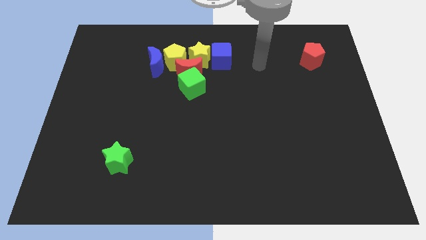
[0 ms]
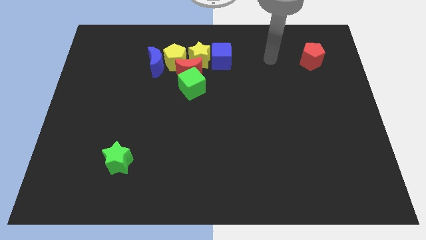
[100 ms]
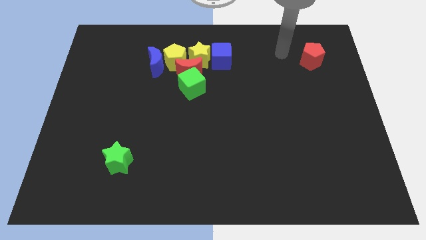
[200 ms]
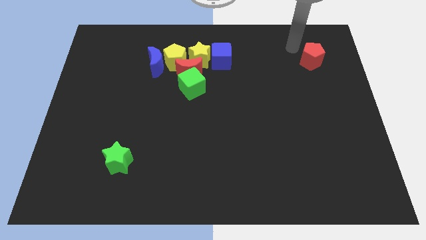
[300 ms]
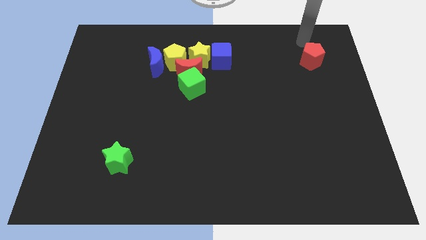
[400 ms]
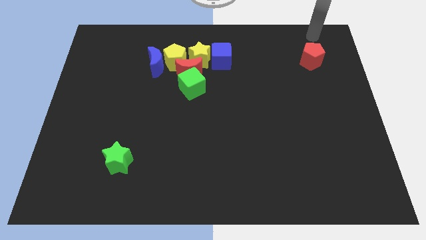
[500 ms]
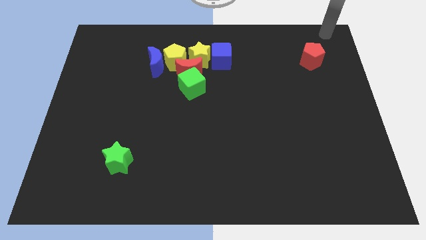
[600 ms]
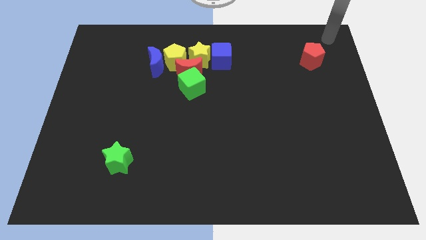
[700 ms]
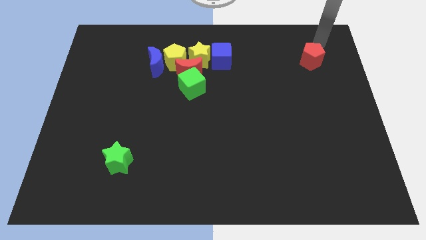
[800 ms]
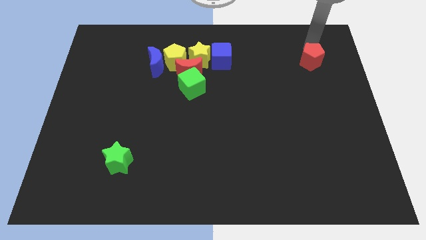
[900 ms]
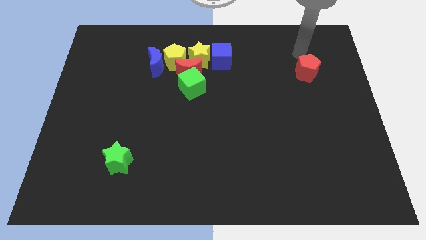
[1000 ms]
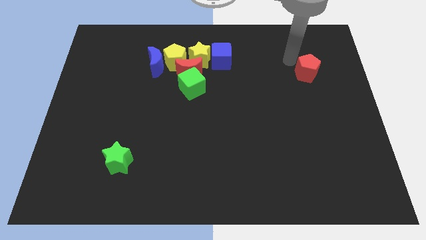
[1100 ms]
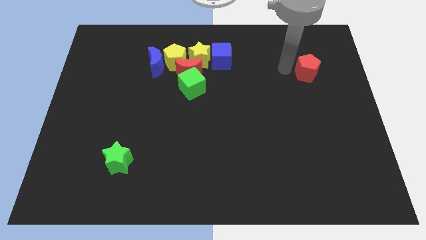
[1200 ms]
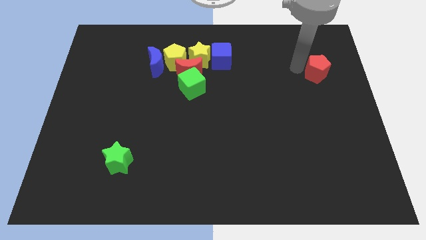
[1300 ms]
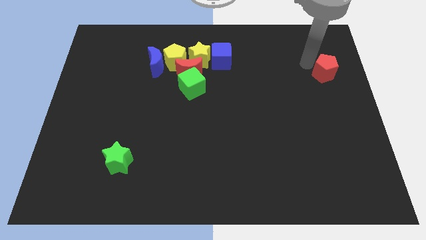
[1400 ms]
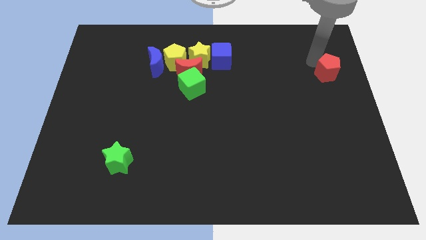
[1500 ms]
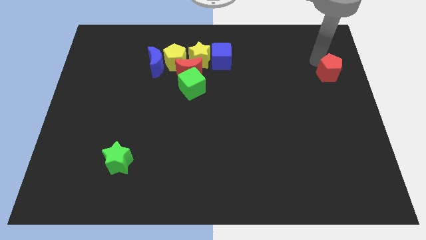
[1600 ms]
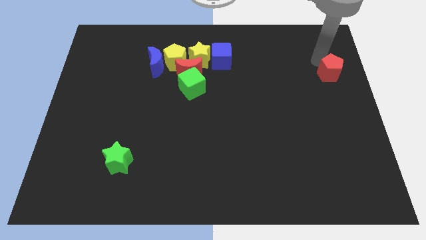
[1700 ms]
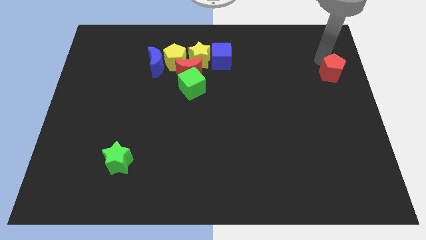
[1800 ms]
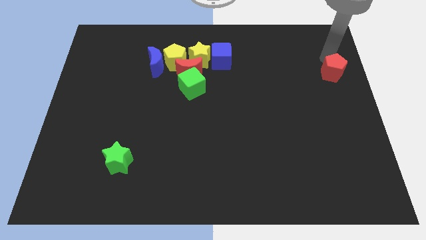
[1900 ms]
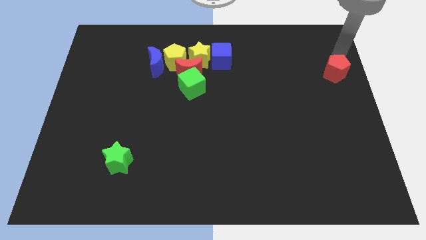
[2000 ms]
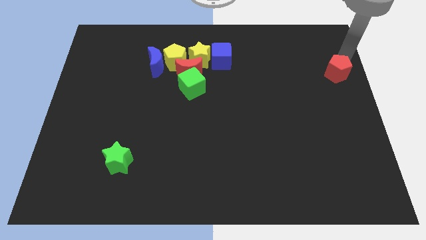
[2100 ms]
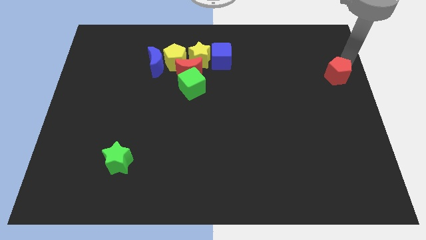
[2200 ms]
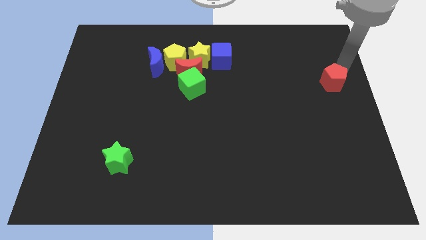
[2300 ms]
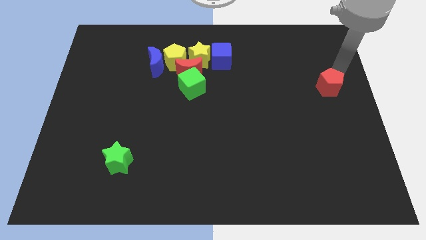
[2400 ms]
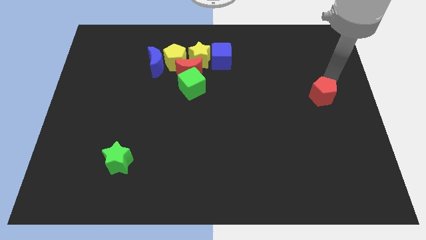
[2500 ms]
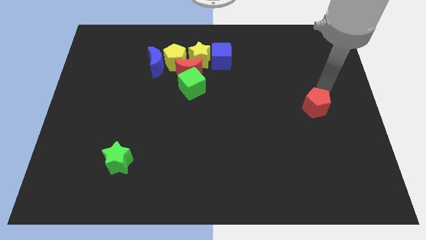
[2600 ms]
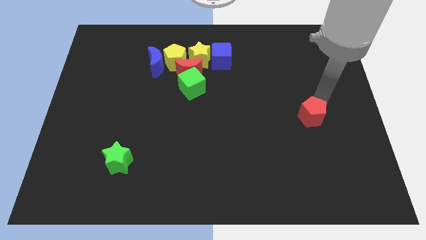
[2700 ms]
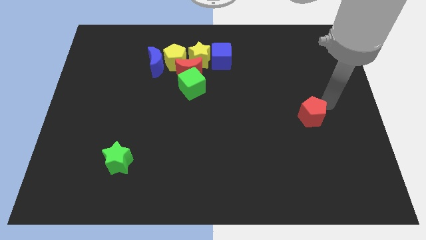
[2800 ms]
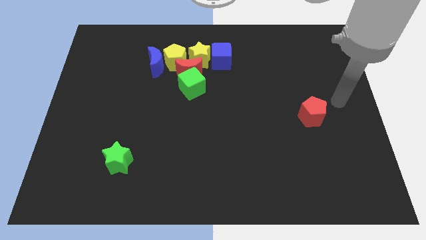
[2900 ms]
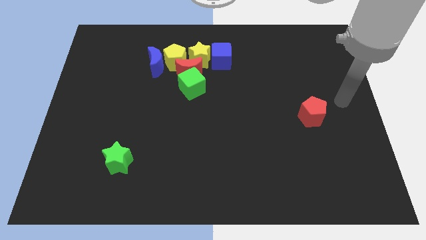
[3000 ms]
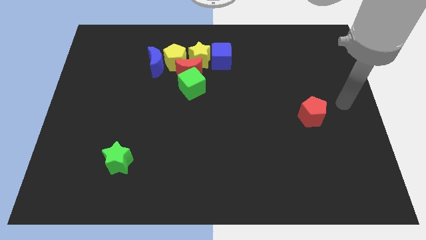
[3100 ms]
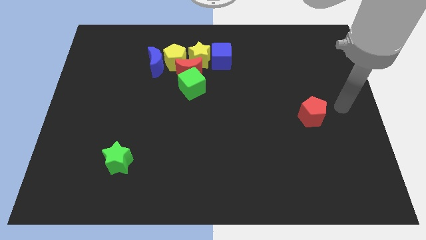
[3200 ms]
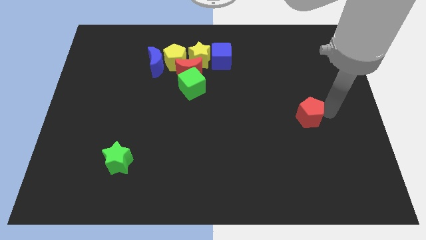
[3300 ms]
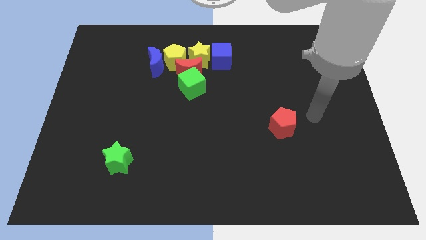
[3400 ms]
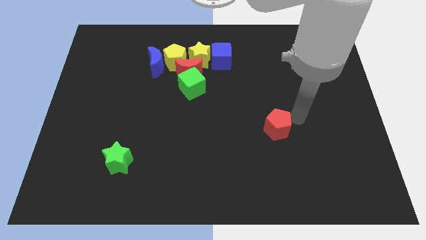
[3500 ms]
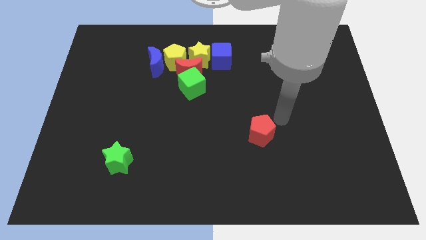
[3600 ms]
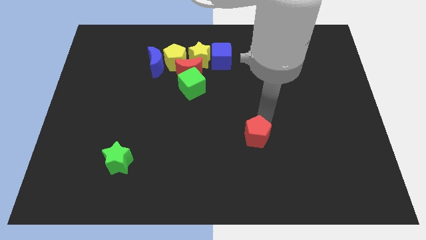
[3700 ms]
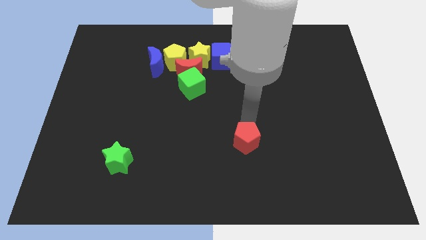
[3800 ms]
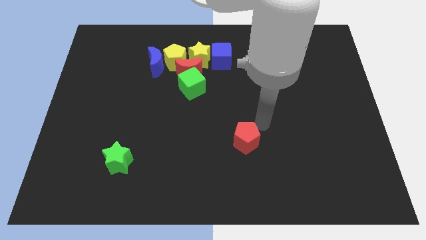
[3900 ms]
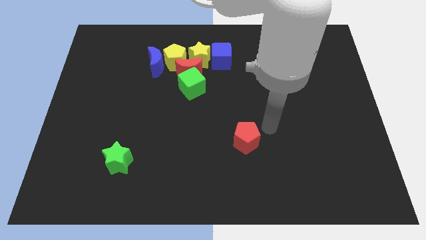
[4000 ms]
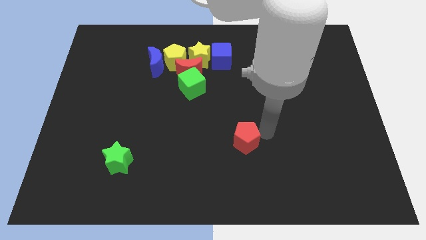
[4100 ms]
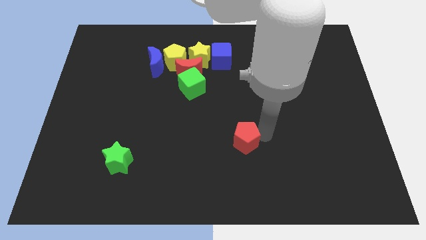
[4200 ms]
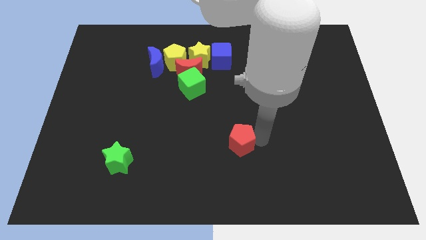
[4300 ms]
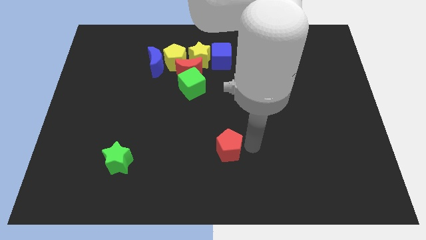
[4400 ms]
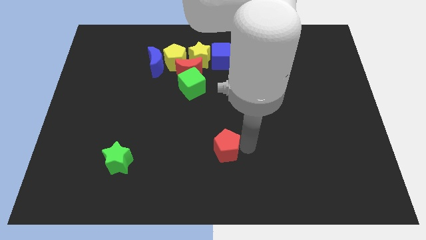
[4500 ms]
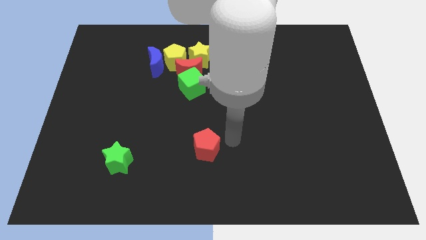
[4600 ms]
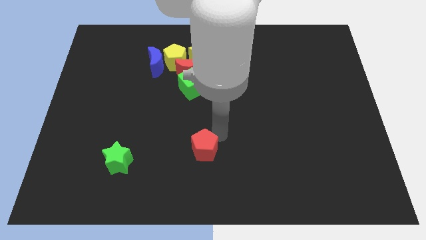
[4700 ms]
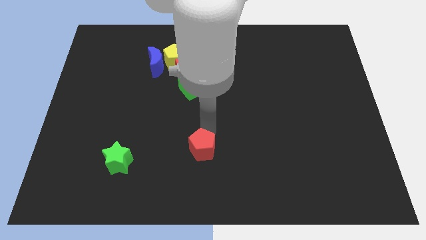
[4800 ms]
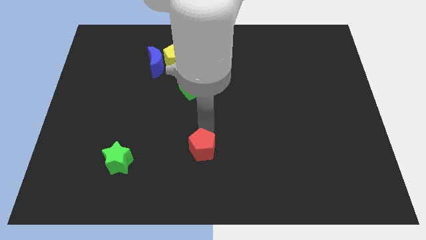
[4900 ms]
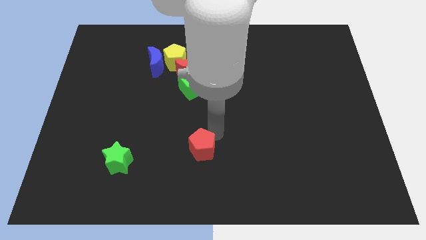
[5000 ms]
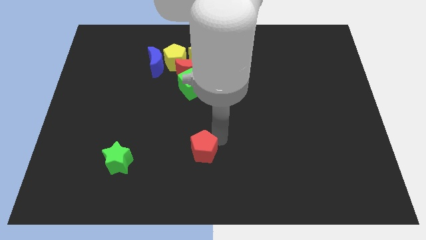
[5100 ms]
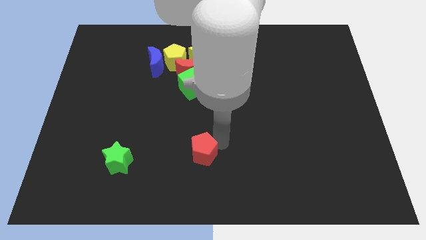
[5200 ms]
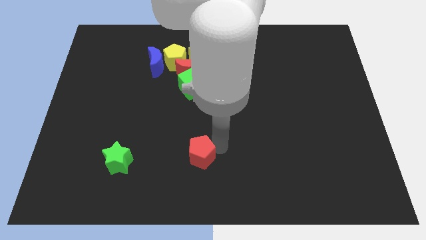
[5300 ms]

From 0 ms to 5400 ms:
place the red pentagon to the right of the green star

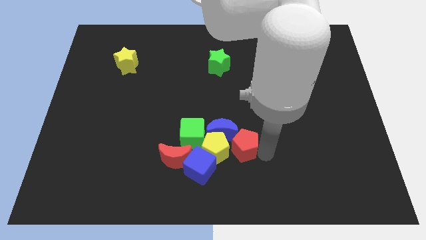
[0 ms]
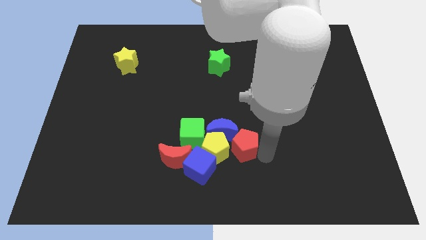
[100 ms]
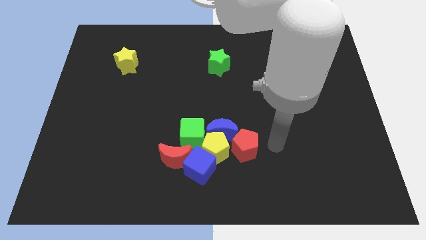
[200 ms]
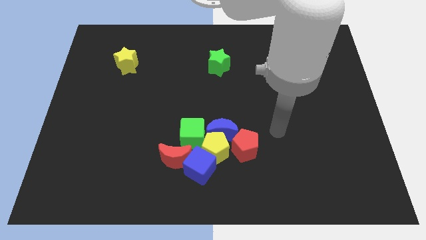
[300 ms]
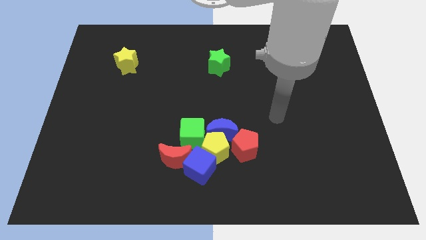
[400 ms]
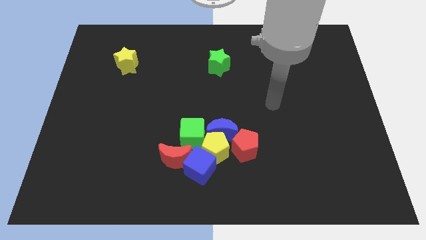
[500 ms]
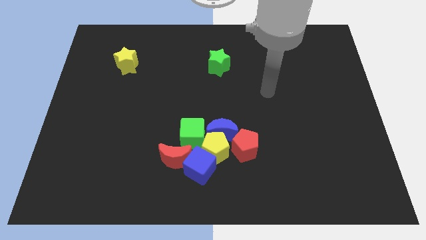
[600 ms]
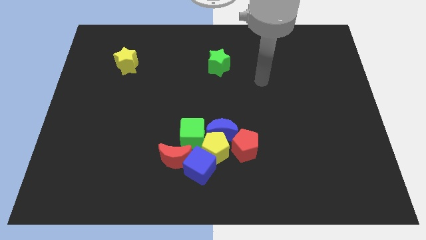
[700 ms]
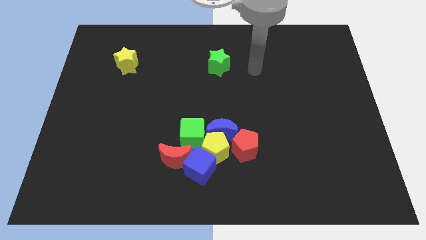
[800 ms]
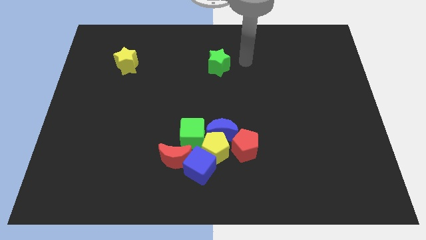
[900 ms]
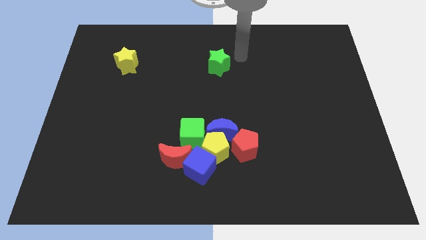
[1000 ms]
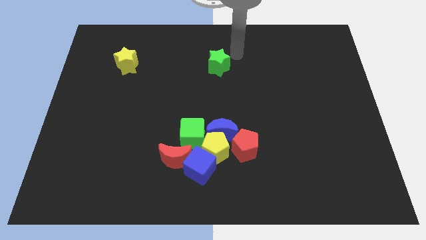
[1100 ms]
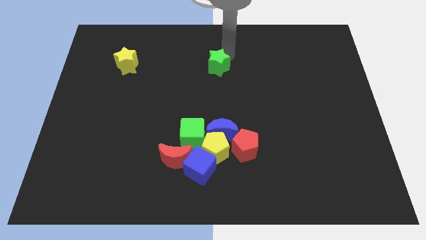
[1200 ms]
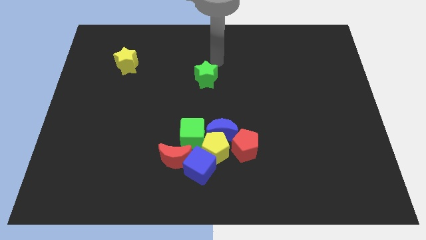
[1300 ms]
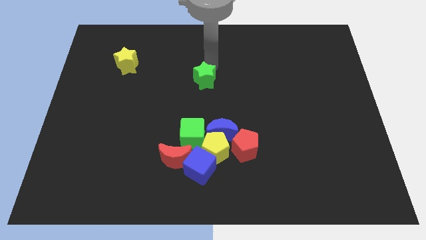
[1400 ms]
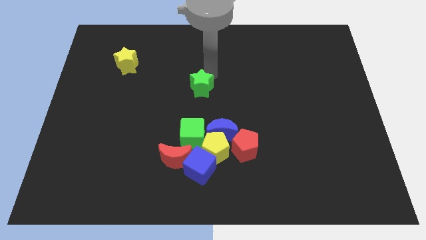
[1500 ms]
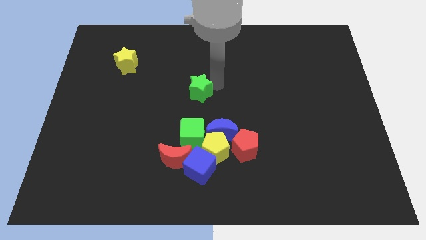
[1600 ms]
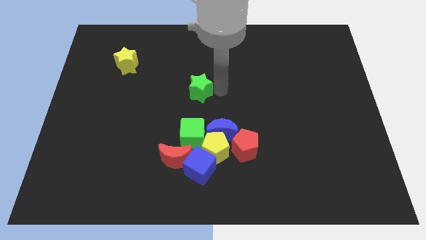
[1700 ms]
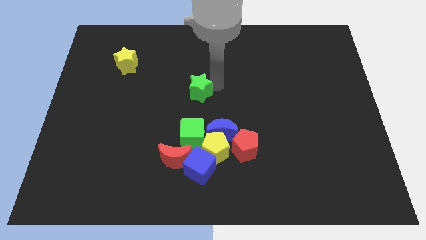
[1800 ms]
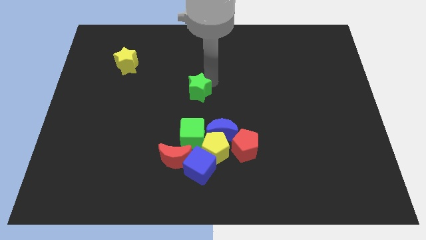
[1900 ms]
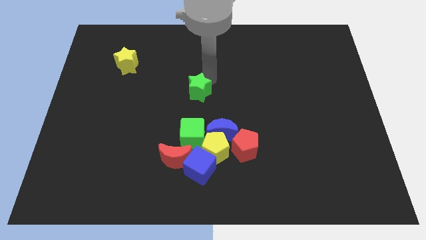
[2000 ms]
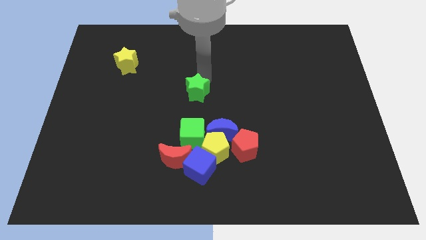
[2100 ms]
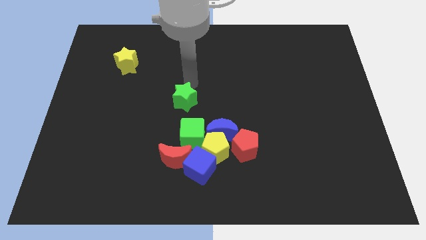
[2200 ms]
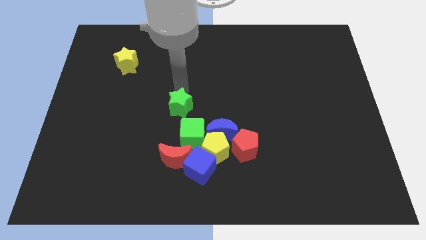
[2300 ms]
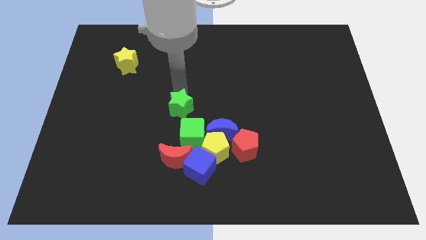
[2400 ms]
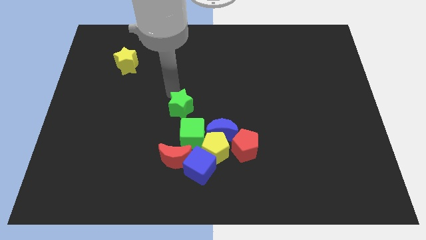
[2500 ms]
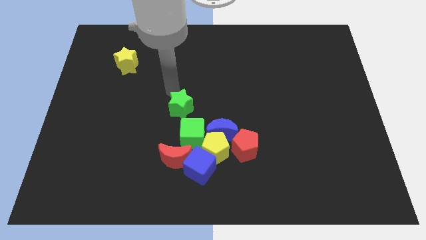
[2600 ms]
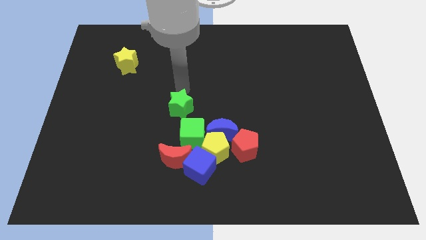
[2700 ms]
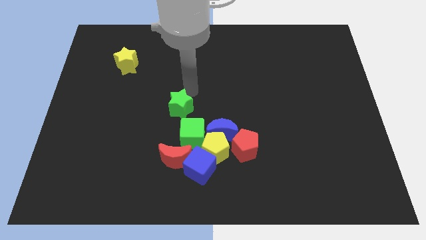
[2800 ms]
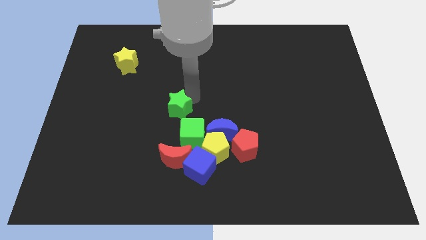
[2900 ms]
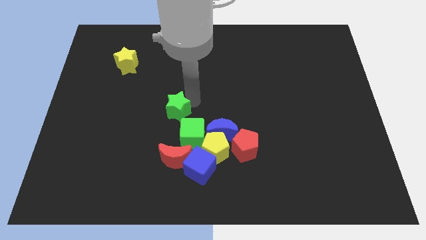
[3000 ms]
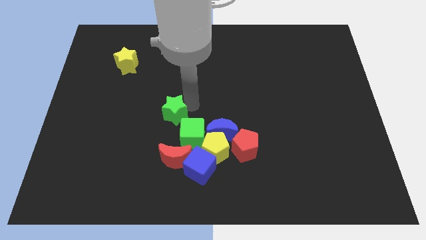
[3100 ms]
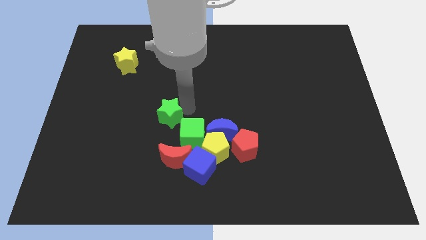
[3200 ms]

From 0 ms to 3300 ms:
place the green star at the top left side of the green cube

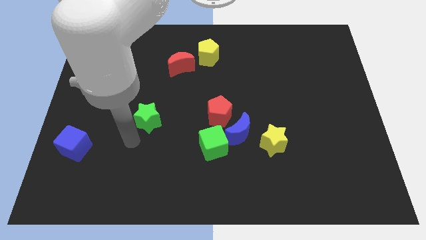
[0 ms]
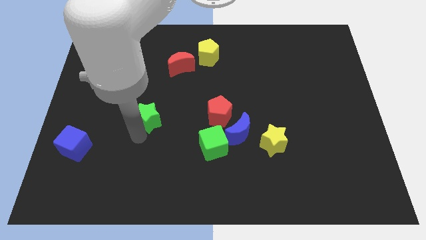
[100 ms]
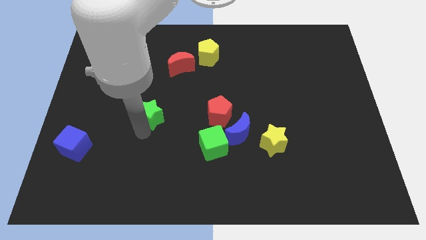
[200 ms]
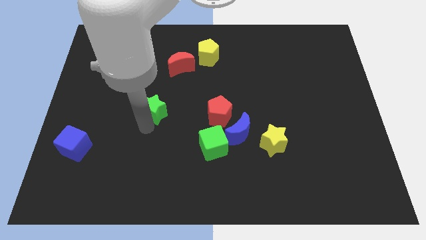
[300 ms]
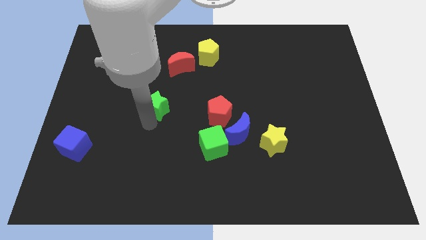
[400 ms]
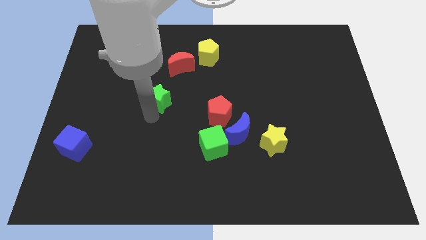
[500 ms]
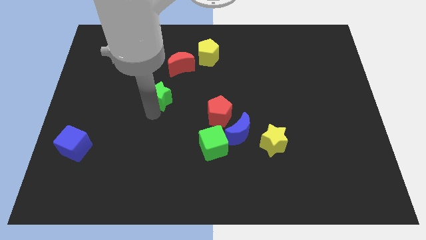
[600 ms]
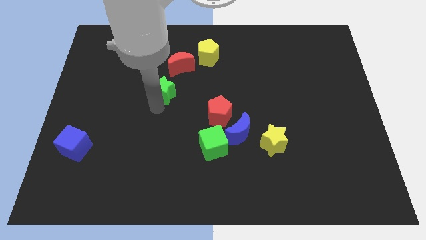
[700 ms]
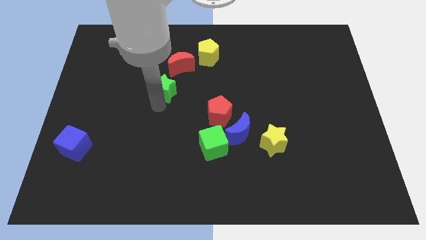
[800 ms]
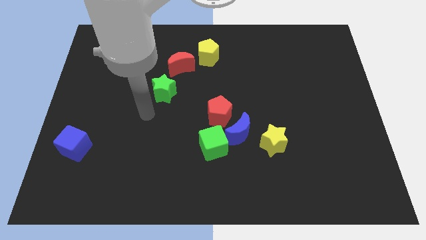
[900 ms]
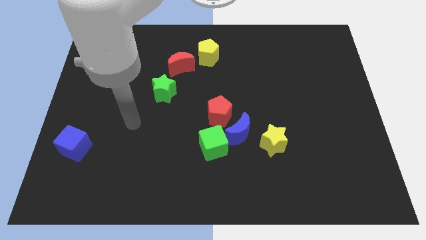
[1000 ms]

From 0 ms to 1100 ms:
move the green star towards the red crescent
